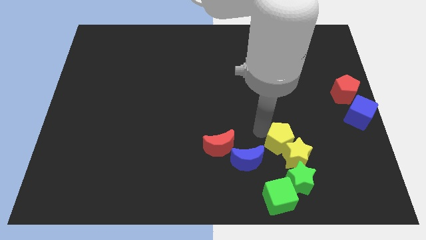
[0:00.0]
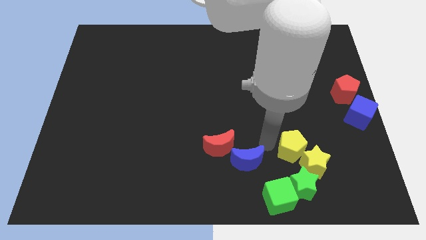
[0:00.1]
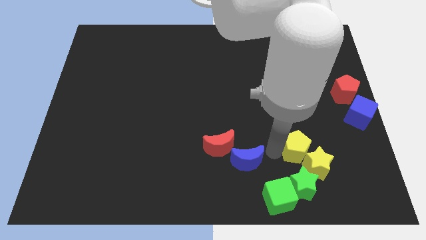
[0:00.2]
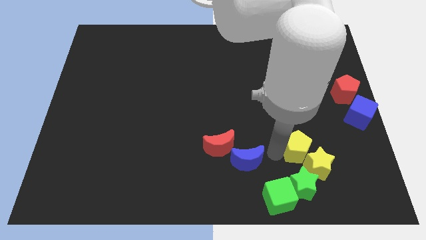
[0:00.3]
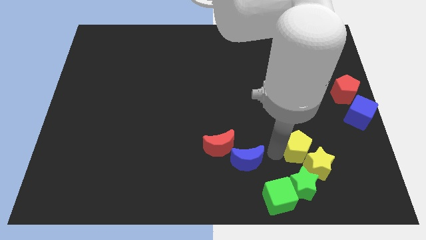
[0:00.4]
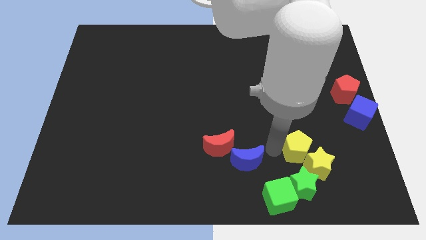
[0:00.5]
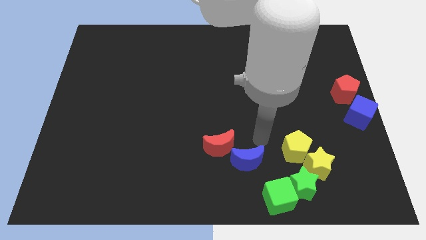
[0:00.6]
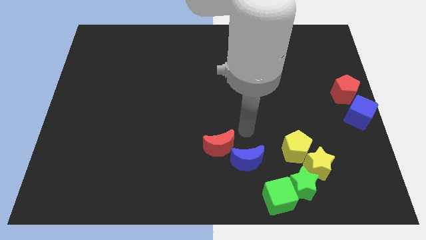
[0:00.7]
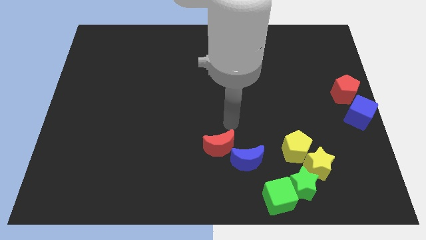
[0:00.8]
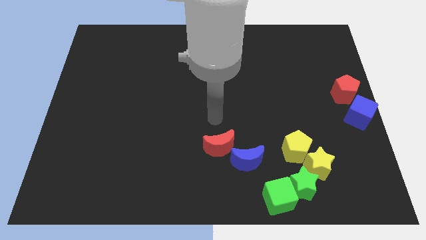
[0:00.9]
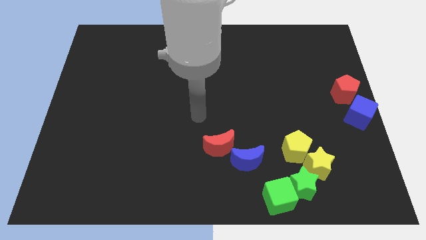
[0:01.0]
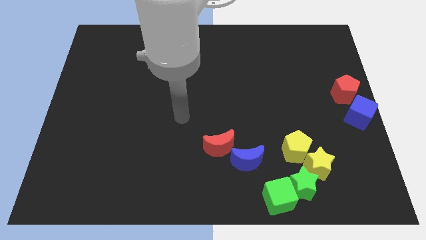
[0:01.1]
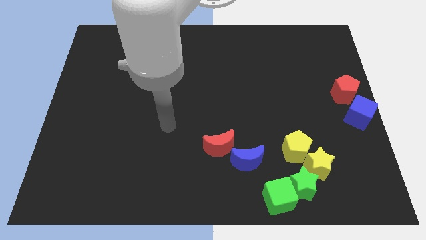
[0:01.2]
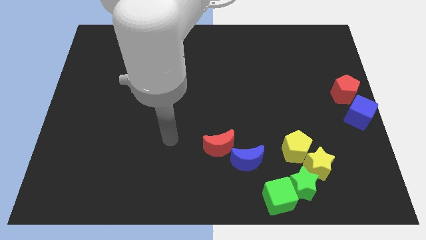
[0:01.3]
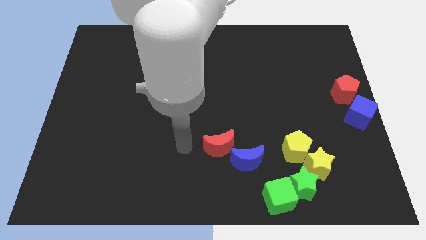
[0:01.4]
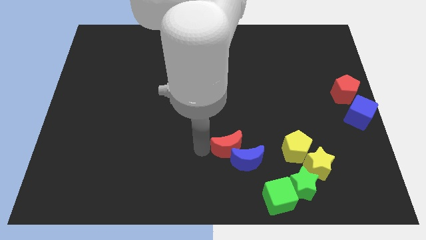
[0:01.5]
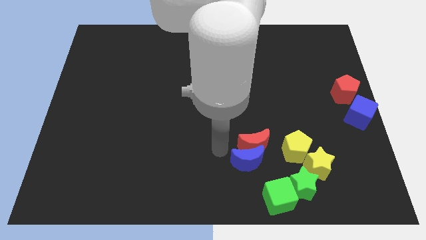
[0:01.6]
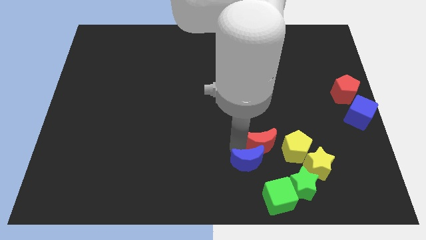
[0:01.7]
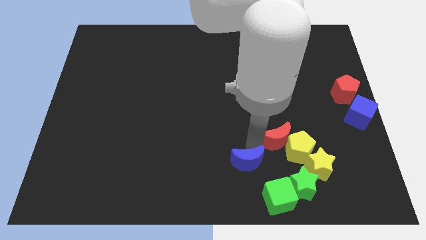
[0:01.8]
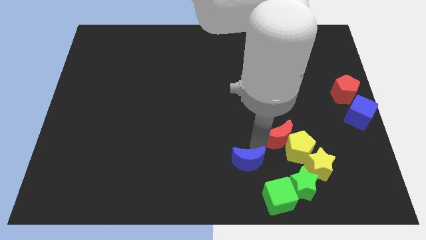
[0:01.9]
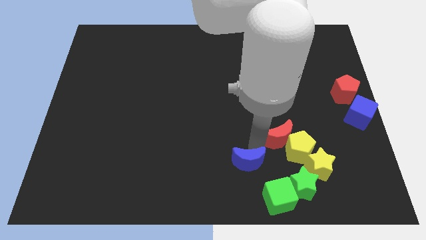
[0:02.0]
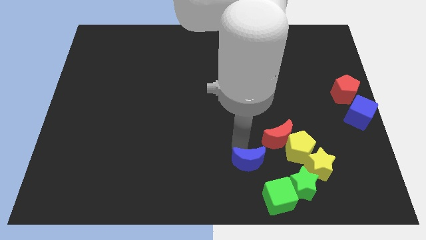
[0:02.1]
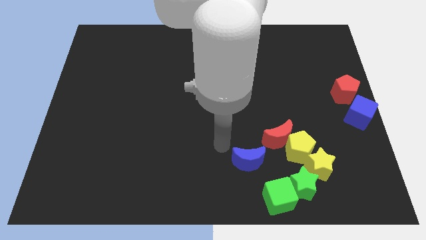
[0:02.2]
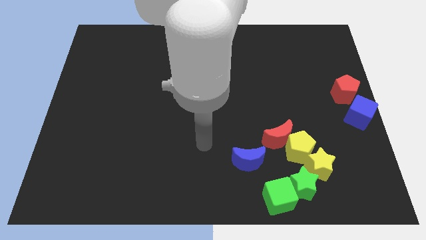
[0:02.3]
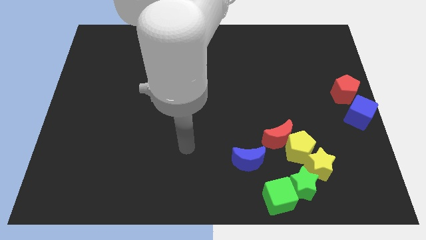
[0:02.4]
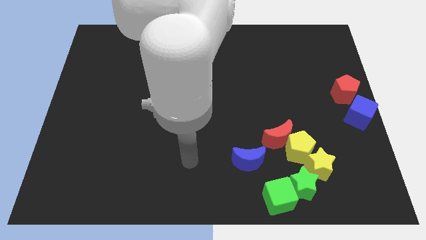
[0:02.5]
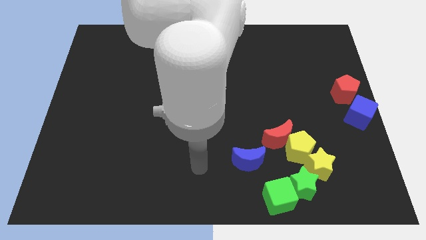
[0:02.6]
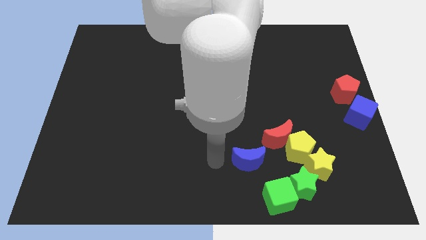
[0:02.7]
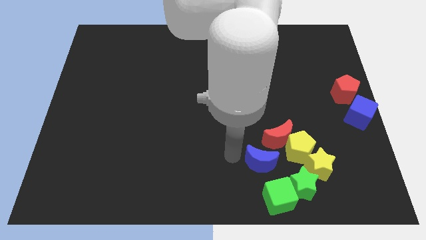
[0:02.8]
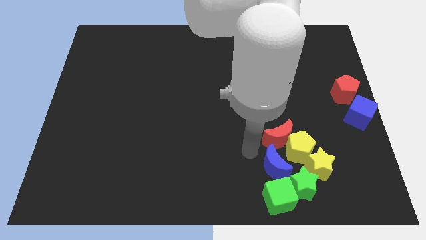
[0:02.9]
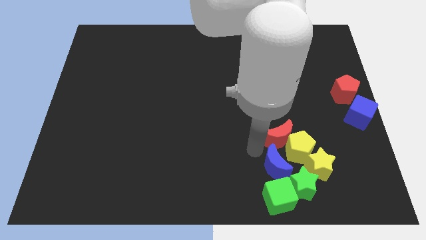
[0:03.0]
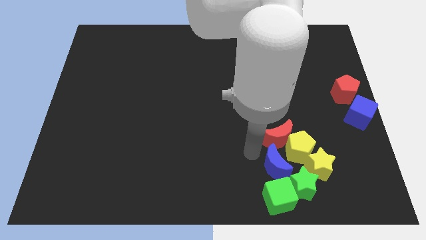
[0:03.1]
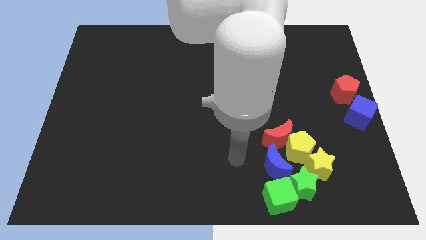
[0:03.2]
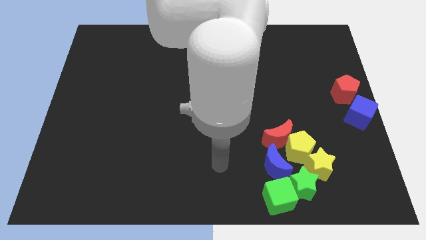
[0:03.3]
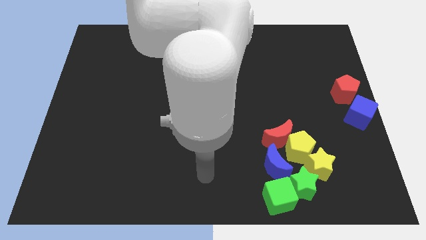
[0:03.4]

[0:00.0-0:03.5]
move a group of blocks into the green blocks

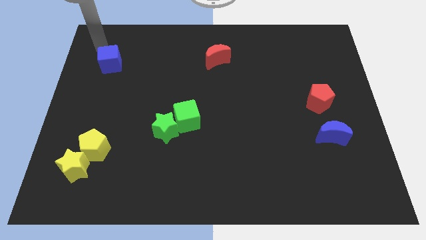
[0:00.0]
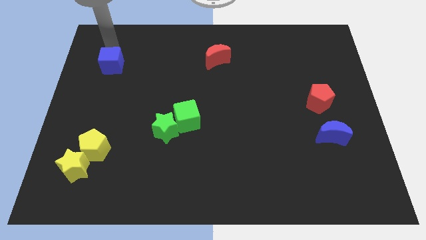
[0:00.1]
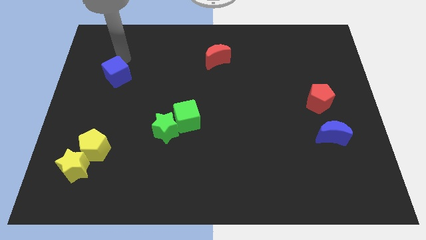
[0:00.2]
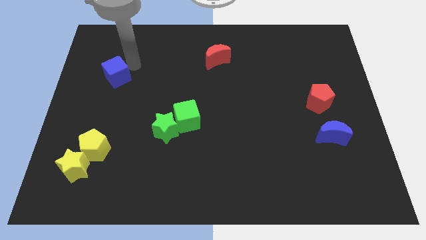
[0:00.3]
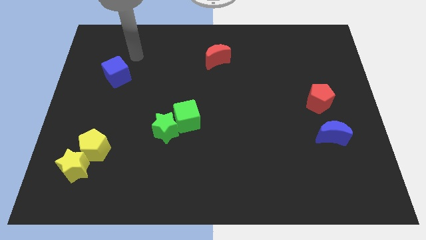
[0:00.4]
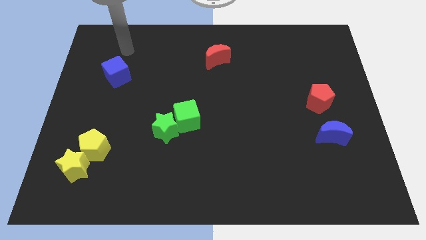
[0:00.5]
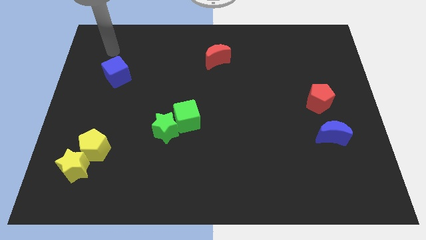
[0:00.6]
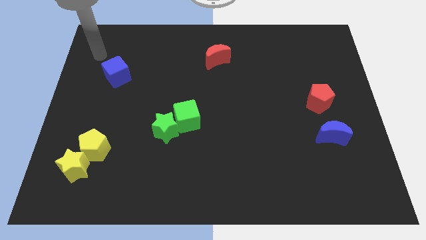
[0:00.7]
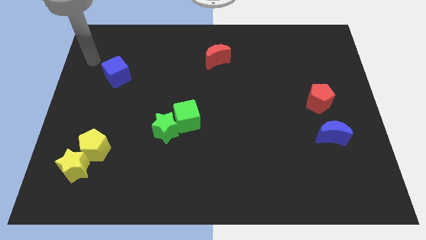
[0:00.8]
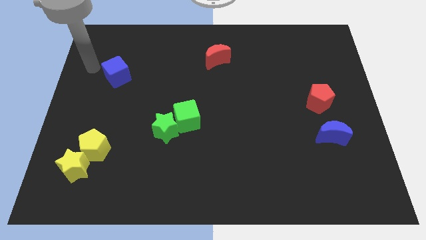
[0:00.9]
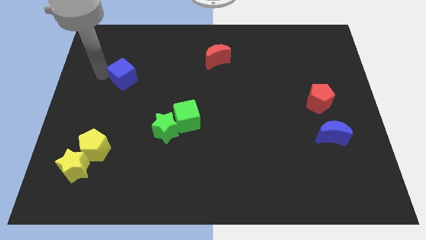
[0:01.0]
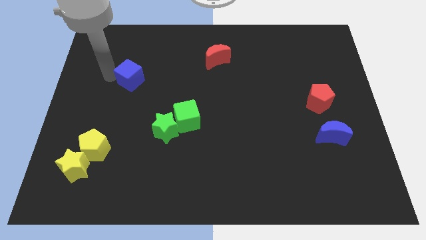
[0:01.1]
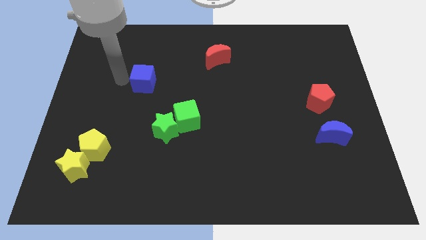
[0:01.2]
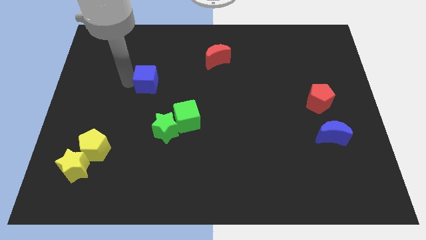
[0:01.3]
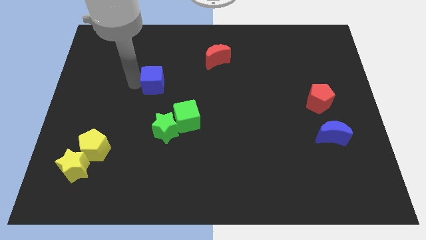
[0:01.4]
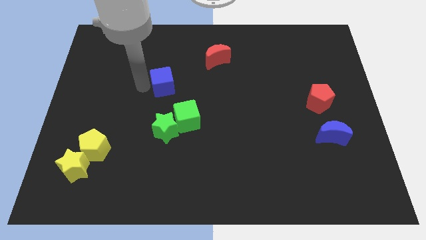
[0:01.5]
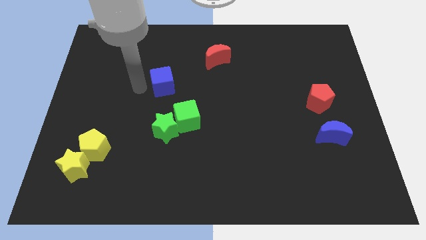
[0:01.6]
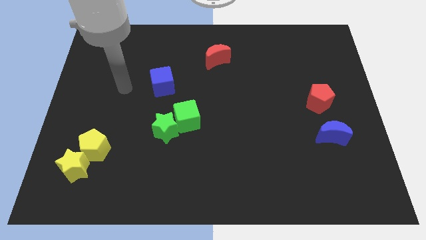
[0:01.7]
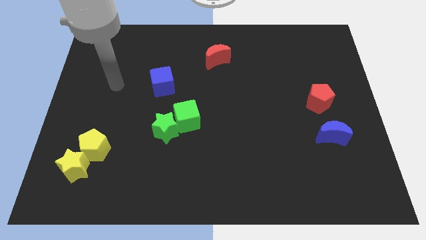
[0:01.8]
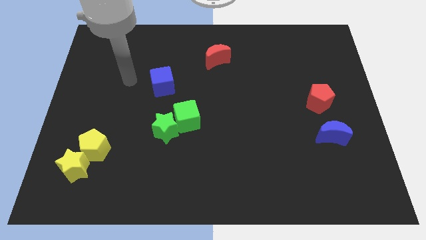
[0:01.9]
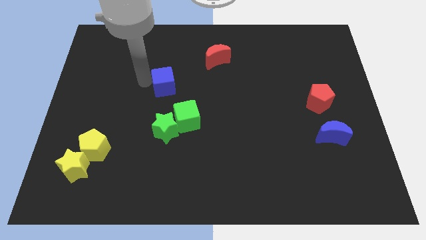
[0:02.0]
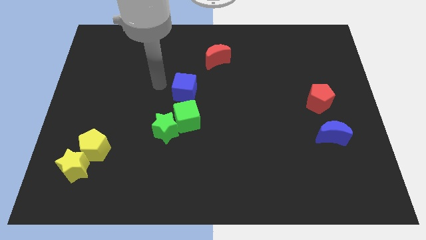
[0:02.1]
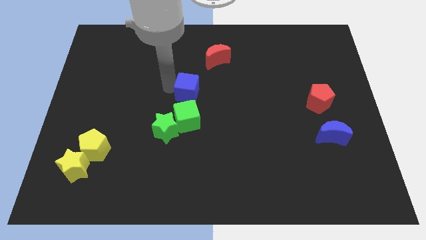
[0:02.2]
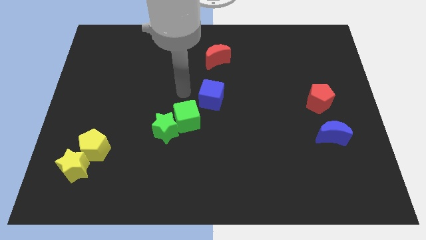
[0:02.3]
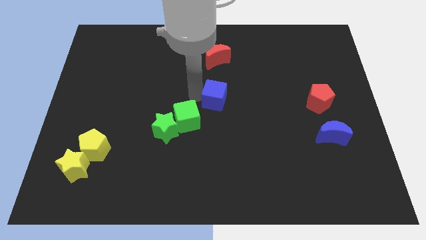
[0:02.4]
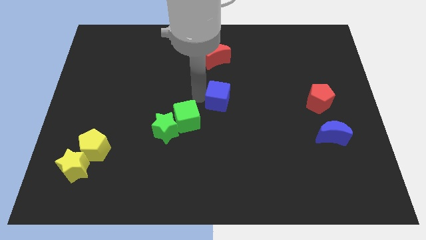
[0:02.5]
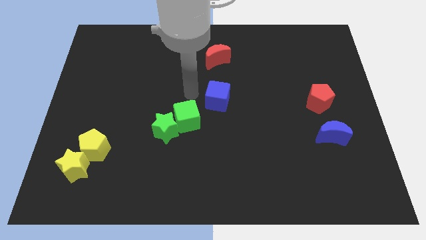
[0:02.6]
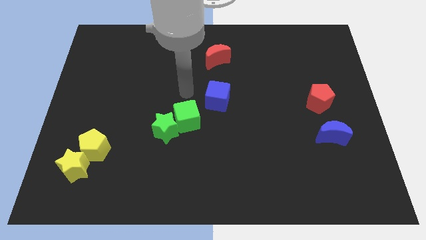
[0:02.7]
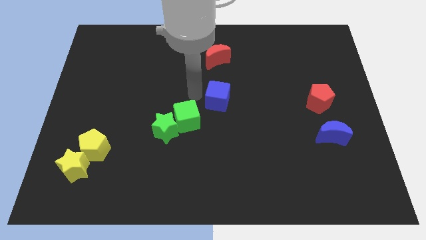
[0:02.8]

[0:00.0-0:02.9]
drag the blue cube to the right side of the board

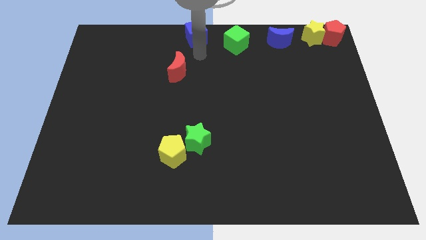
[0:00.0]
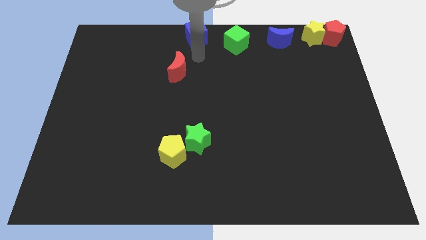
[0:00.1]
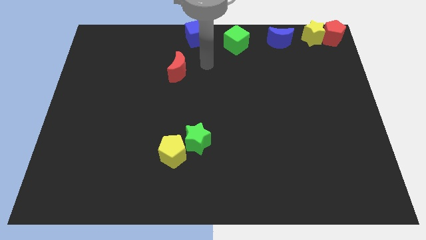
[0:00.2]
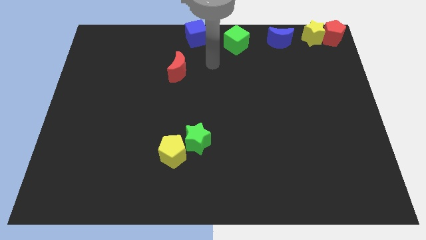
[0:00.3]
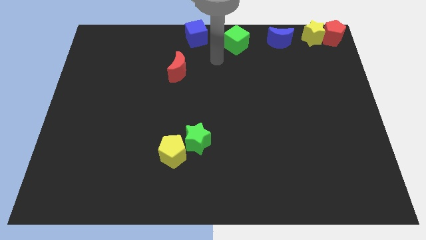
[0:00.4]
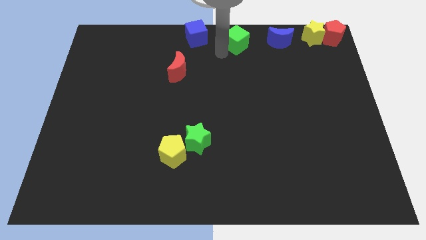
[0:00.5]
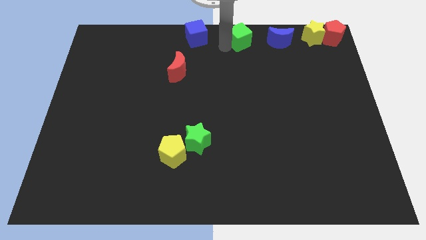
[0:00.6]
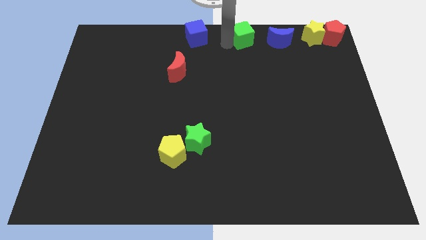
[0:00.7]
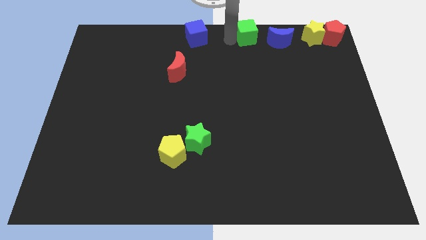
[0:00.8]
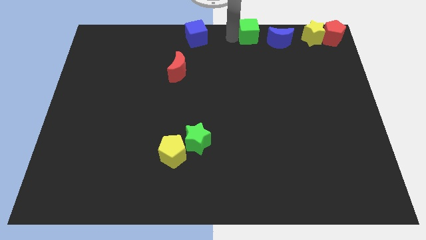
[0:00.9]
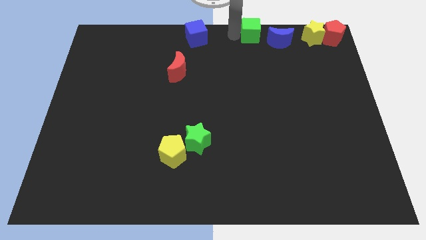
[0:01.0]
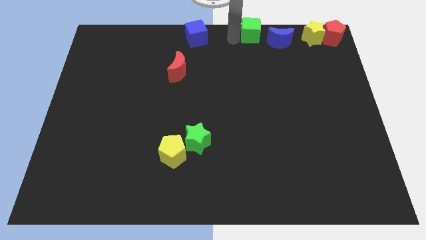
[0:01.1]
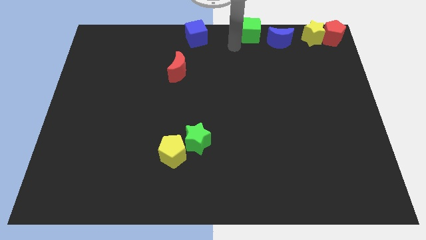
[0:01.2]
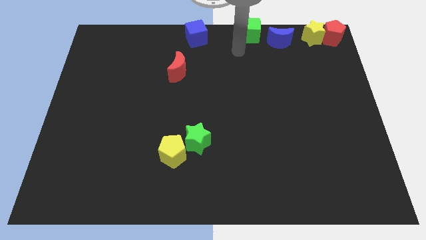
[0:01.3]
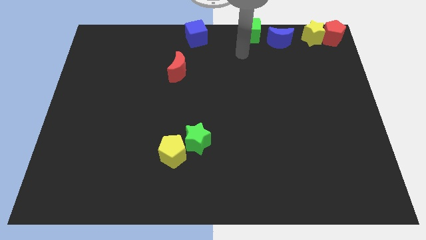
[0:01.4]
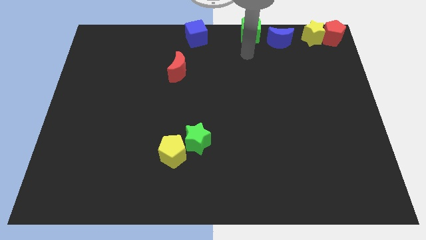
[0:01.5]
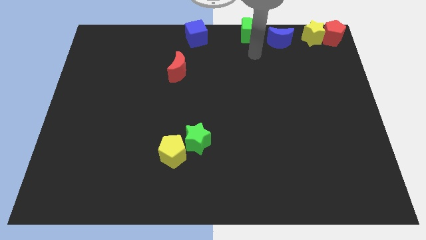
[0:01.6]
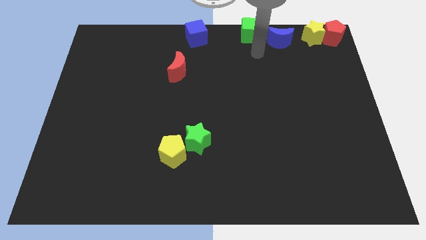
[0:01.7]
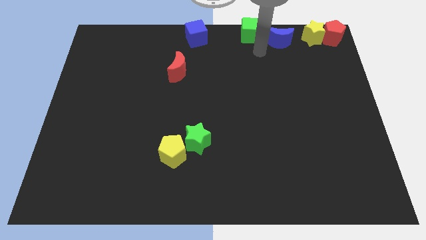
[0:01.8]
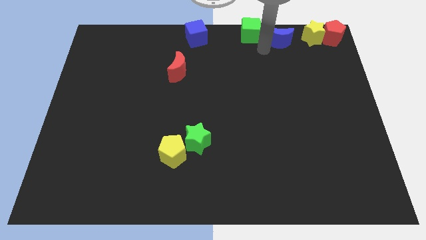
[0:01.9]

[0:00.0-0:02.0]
push the green cube close to the blue moon

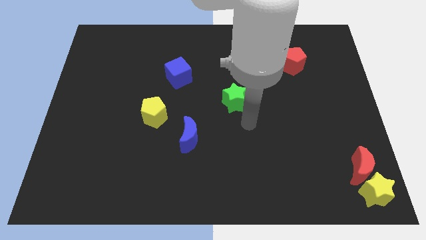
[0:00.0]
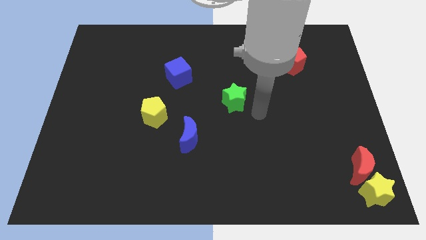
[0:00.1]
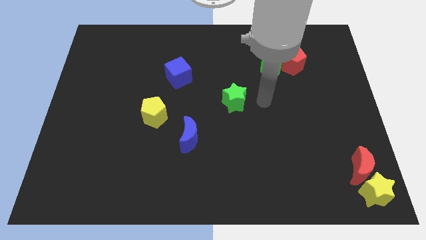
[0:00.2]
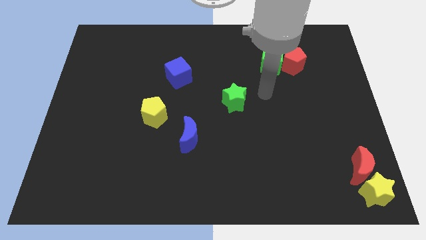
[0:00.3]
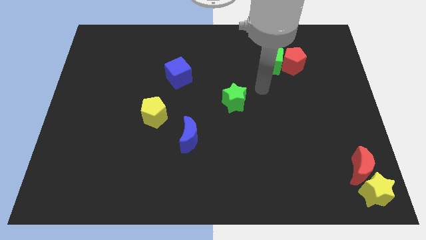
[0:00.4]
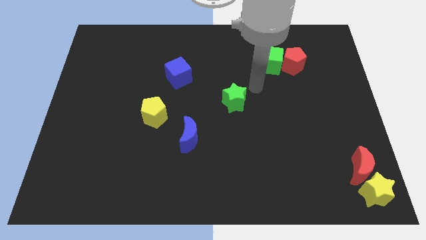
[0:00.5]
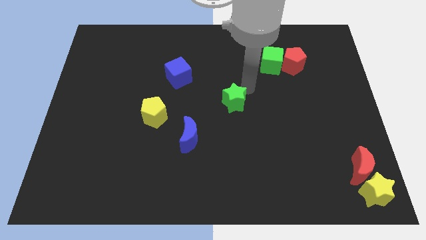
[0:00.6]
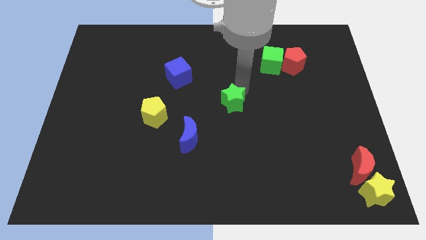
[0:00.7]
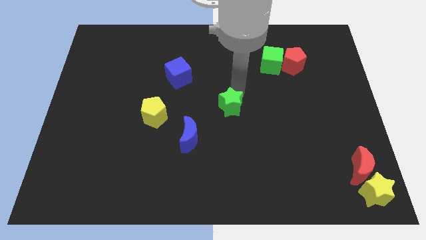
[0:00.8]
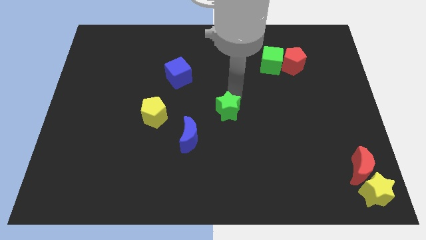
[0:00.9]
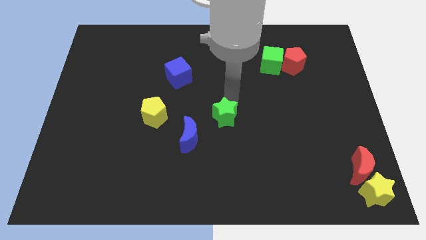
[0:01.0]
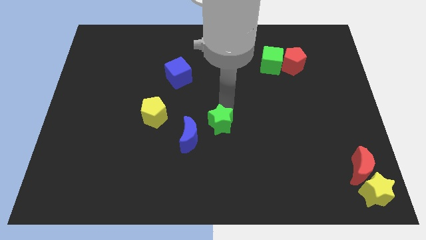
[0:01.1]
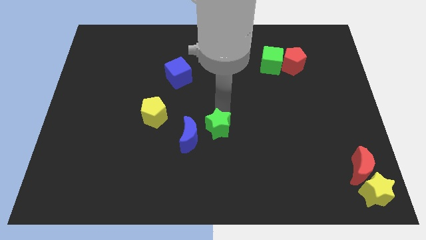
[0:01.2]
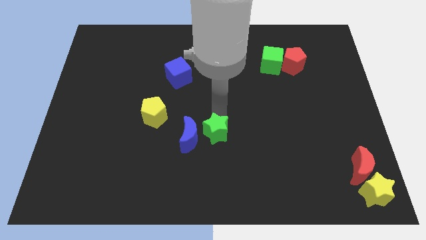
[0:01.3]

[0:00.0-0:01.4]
move the green star to the right of the blue moon
